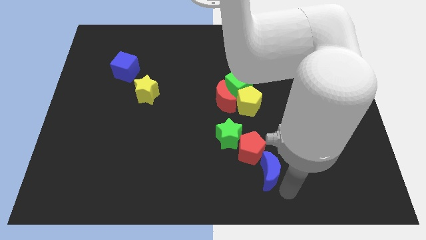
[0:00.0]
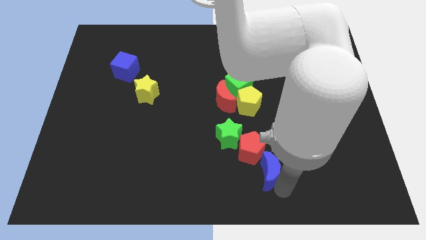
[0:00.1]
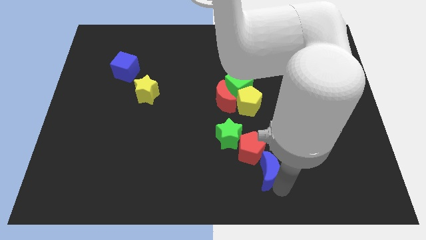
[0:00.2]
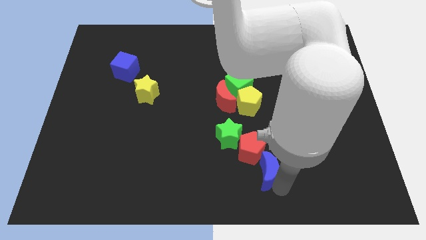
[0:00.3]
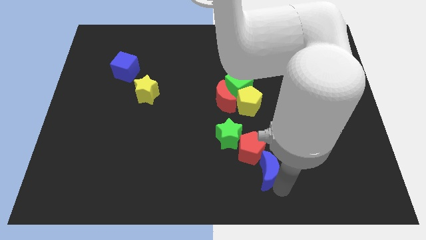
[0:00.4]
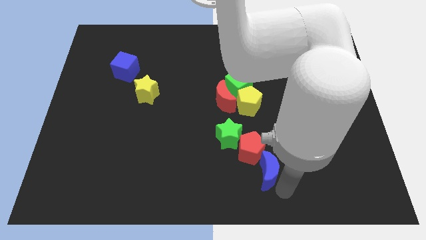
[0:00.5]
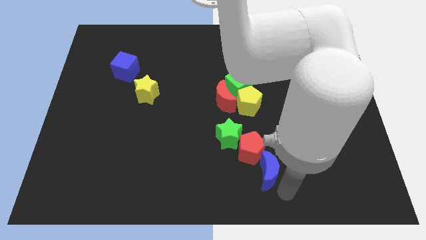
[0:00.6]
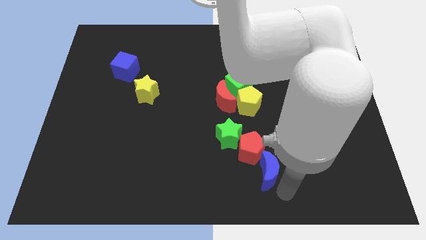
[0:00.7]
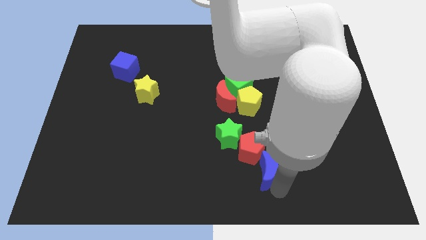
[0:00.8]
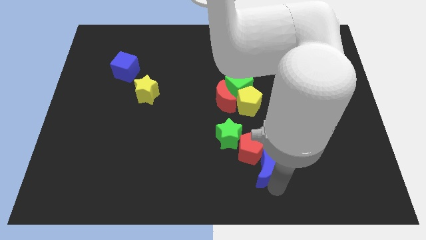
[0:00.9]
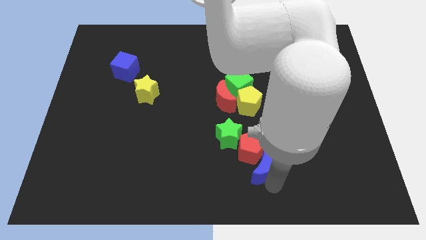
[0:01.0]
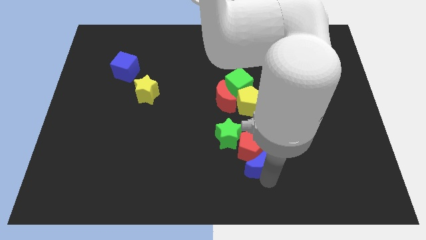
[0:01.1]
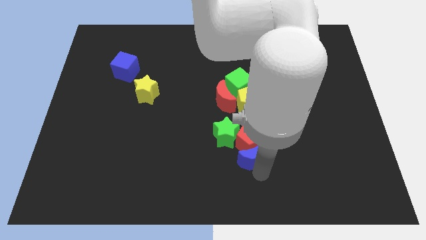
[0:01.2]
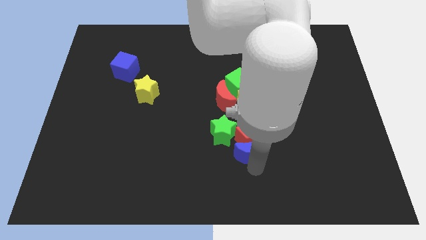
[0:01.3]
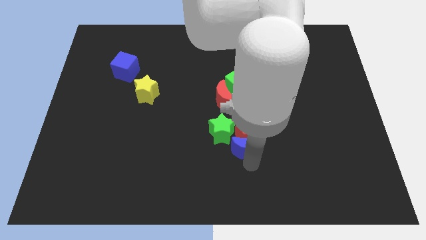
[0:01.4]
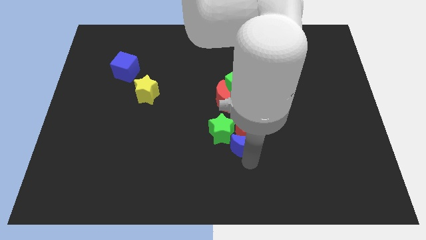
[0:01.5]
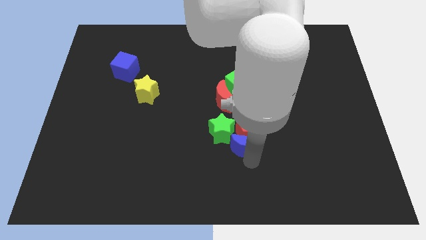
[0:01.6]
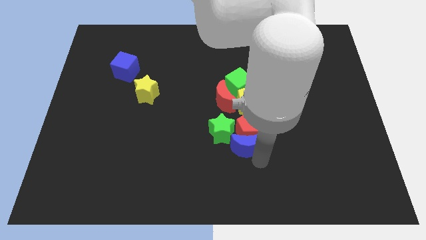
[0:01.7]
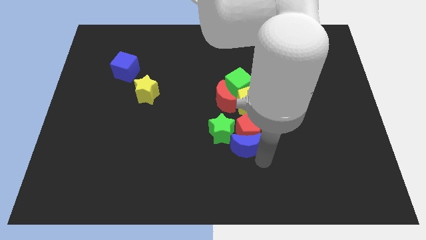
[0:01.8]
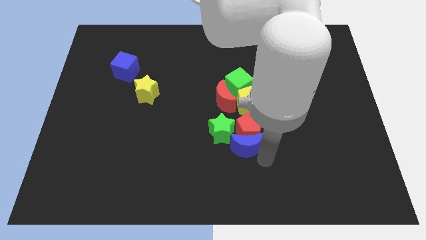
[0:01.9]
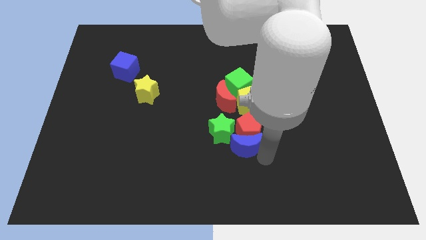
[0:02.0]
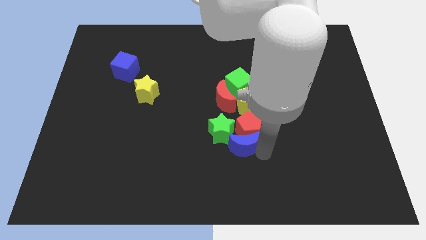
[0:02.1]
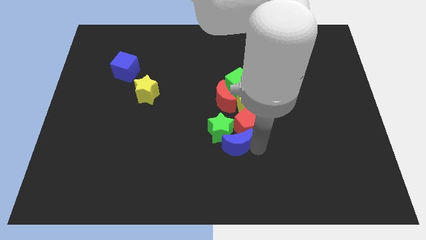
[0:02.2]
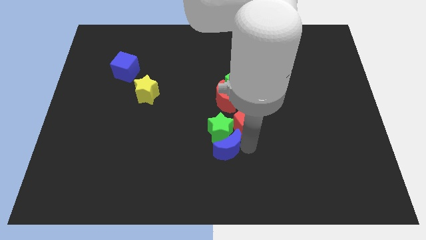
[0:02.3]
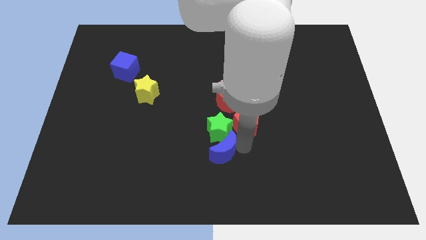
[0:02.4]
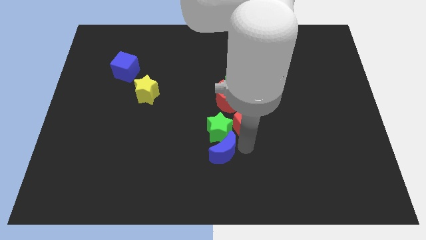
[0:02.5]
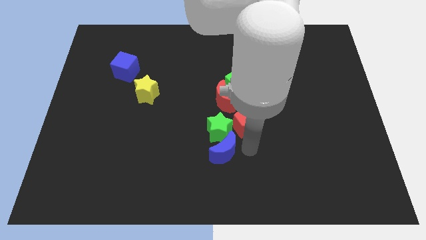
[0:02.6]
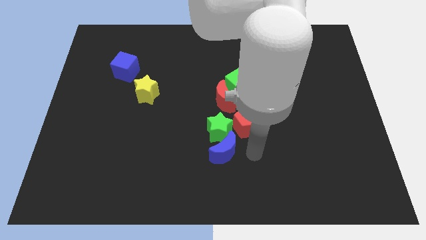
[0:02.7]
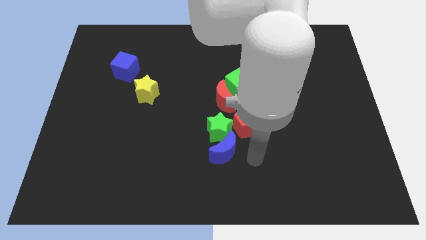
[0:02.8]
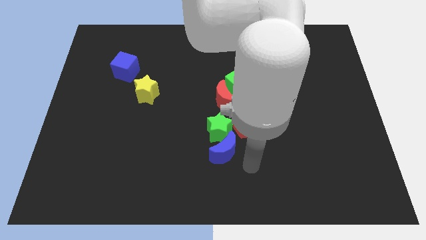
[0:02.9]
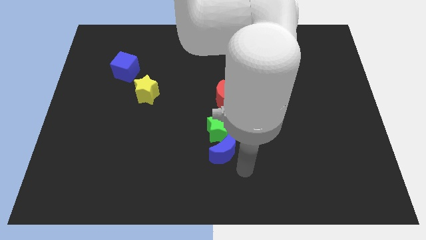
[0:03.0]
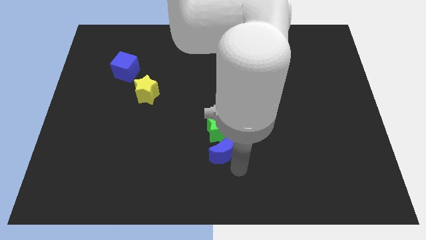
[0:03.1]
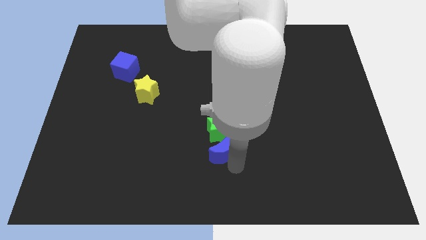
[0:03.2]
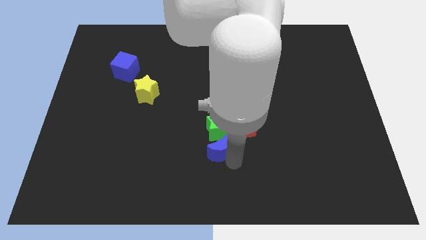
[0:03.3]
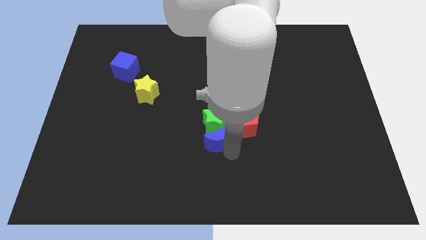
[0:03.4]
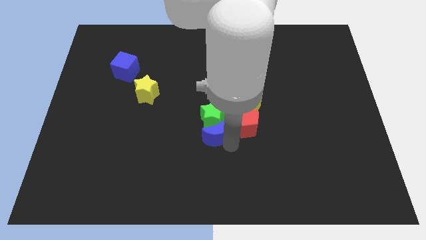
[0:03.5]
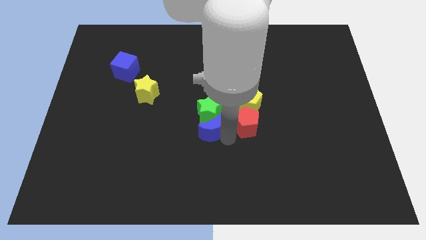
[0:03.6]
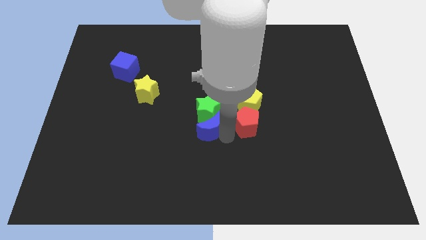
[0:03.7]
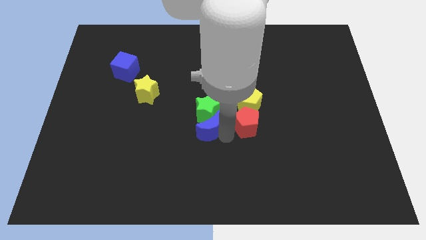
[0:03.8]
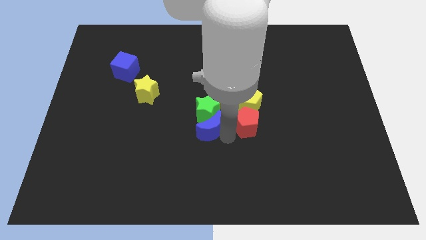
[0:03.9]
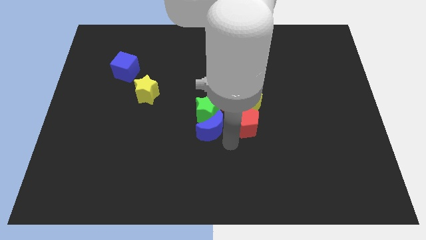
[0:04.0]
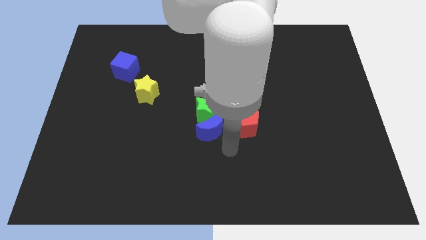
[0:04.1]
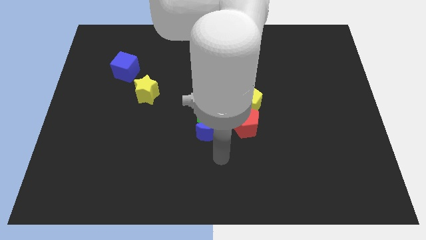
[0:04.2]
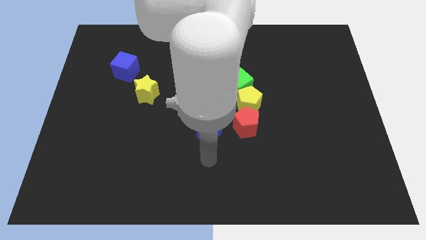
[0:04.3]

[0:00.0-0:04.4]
push the blue crescent into green star

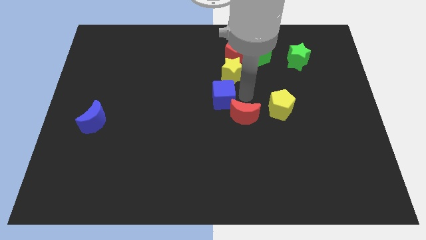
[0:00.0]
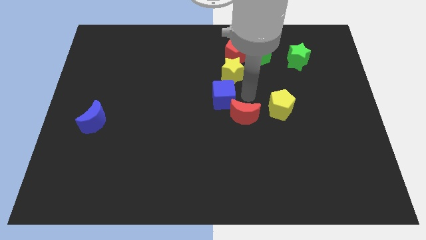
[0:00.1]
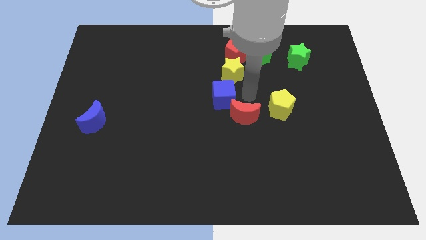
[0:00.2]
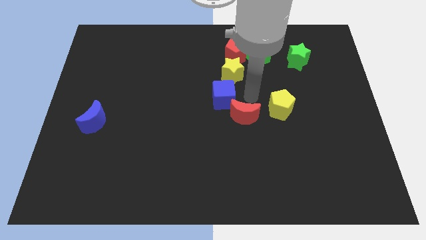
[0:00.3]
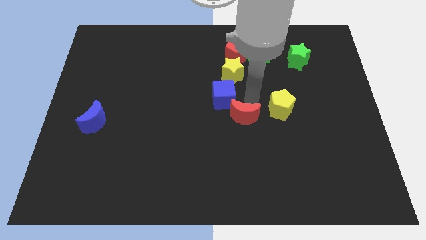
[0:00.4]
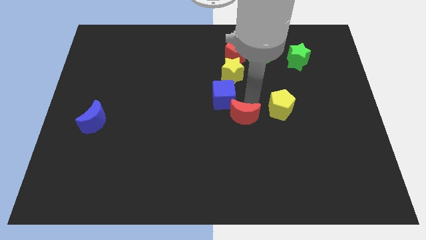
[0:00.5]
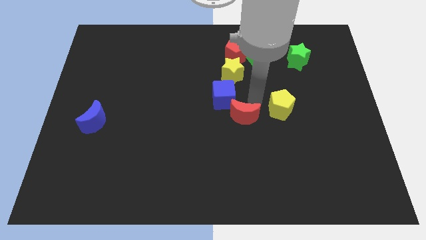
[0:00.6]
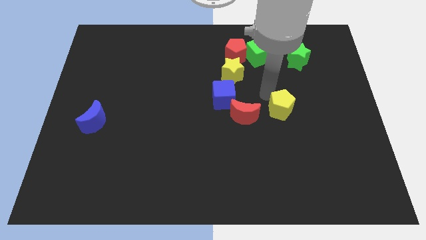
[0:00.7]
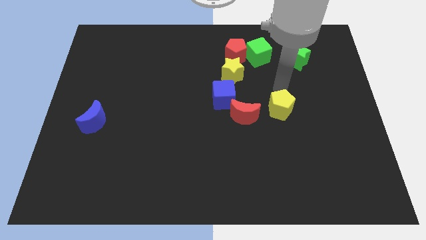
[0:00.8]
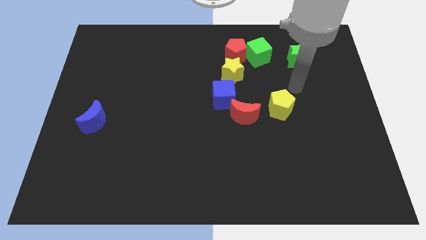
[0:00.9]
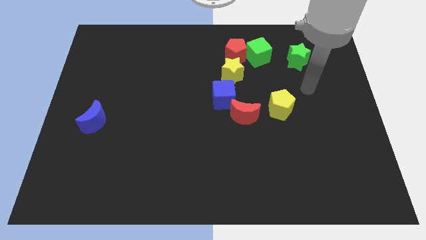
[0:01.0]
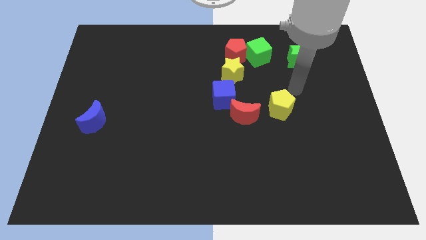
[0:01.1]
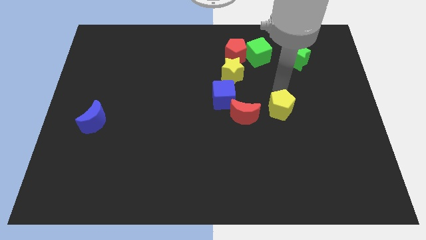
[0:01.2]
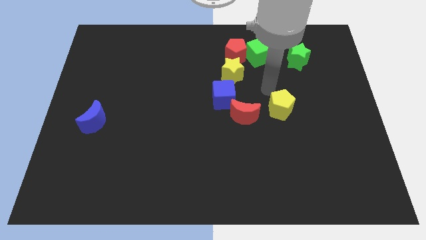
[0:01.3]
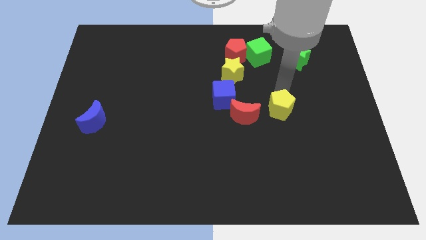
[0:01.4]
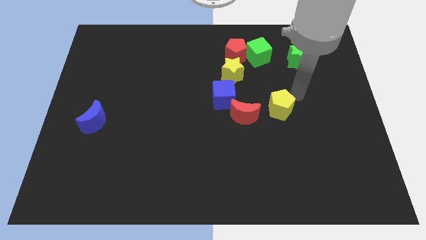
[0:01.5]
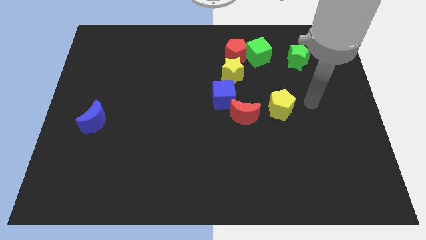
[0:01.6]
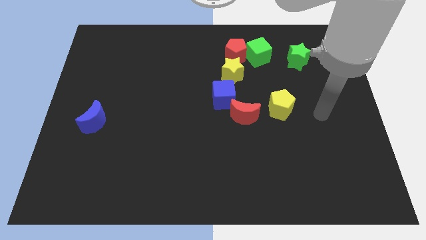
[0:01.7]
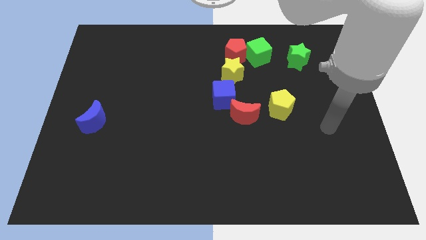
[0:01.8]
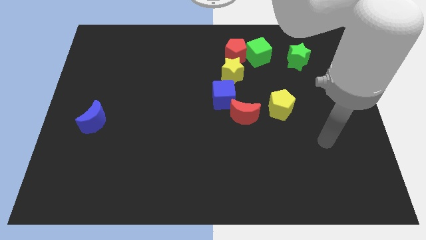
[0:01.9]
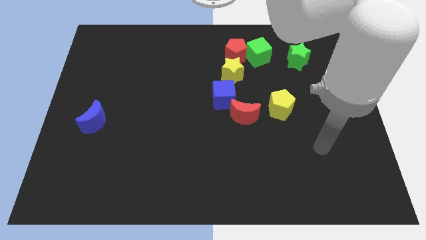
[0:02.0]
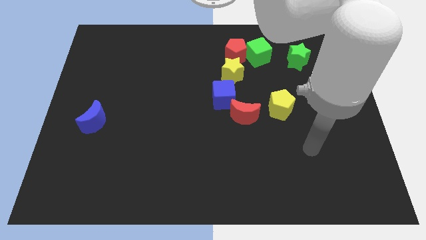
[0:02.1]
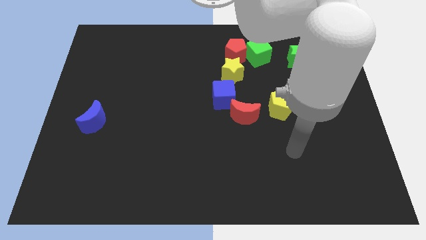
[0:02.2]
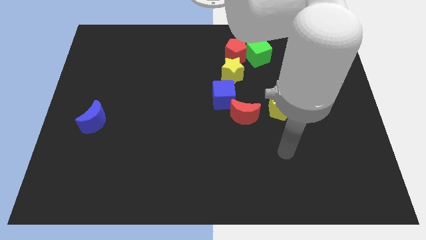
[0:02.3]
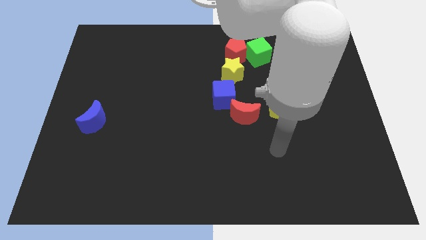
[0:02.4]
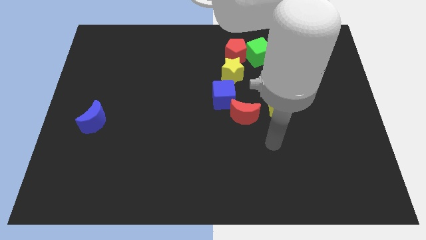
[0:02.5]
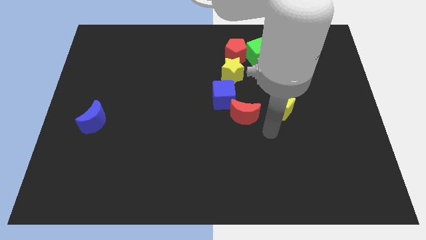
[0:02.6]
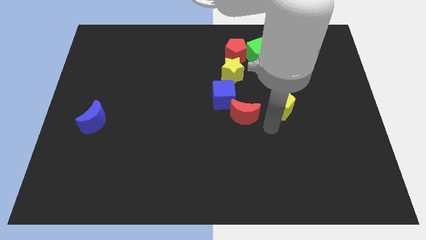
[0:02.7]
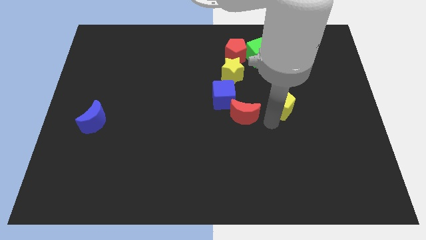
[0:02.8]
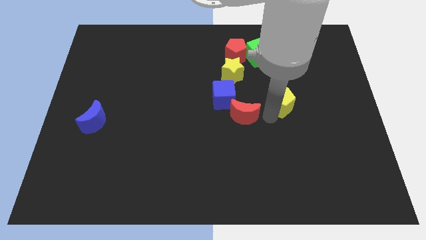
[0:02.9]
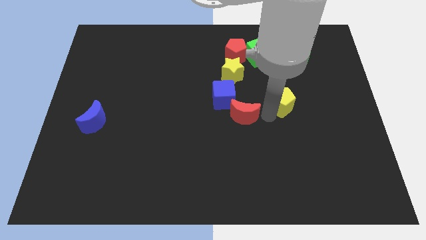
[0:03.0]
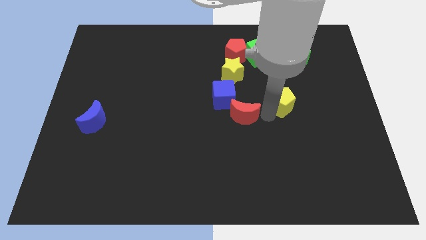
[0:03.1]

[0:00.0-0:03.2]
touch at the bottom left side of the yellow pentagon

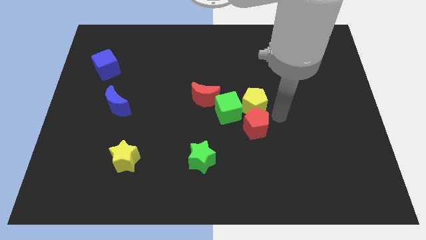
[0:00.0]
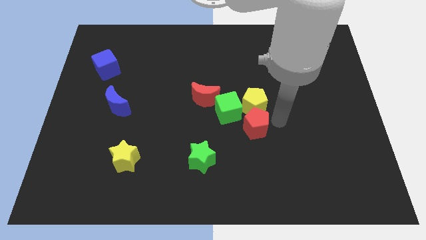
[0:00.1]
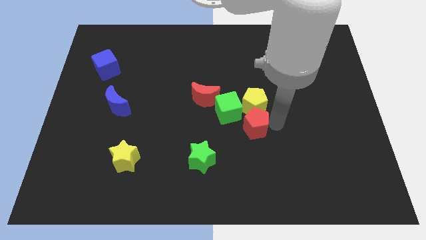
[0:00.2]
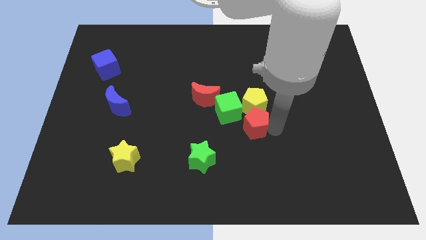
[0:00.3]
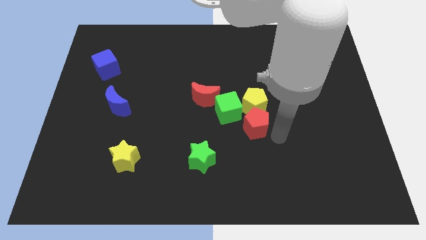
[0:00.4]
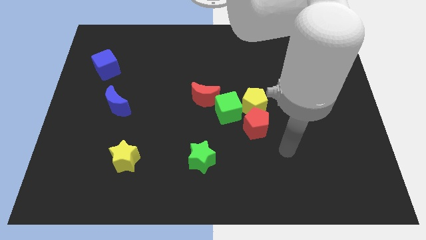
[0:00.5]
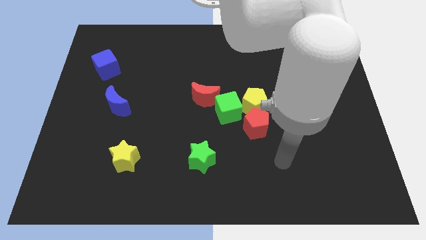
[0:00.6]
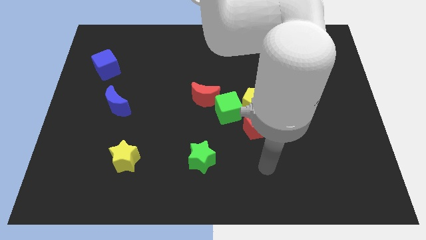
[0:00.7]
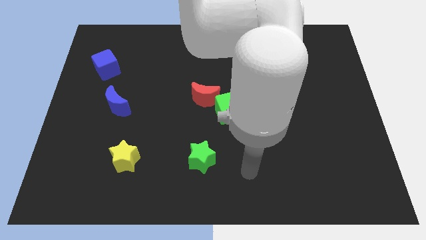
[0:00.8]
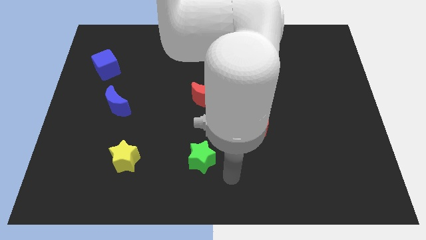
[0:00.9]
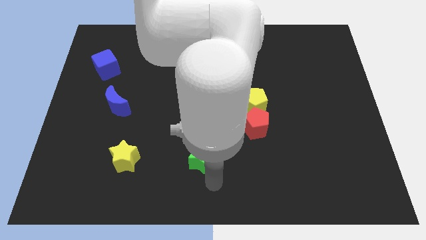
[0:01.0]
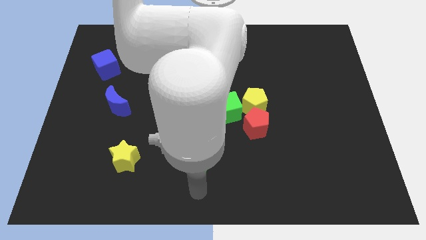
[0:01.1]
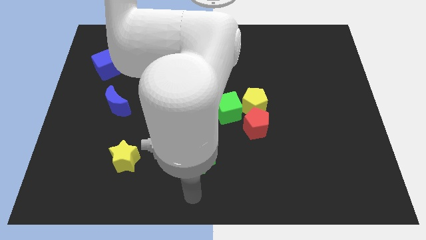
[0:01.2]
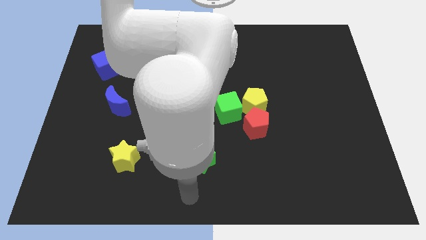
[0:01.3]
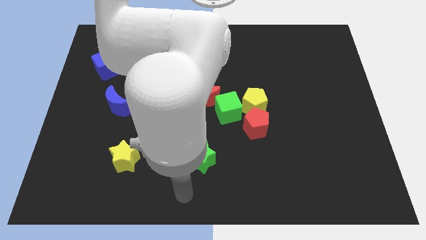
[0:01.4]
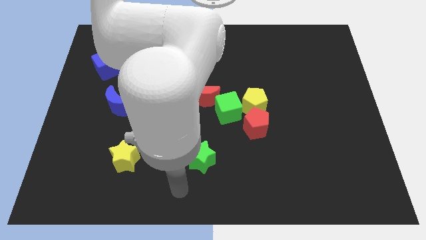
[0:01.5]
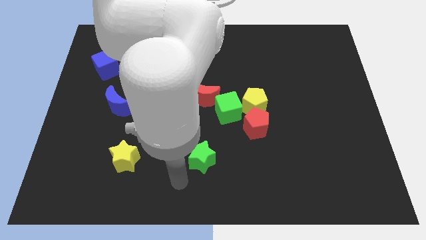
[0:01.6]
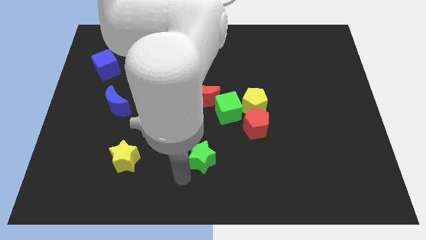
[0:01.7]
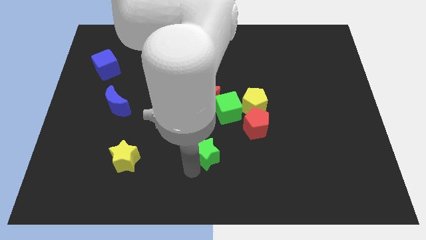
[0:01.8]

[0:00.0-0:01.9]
move your arm below to the green star
